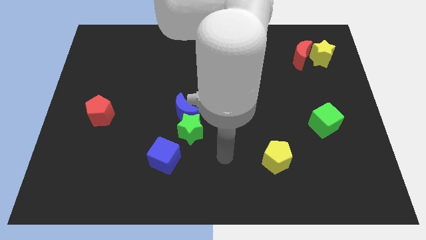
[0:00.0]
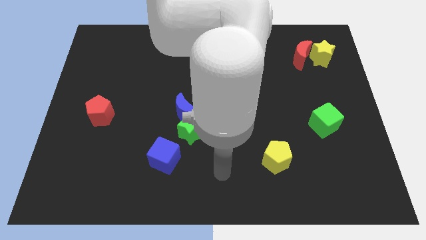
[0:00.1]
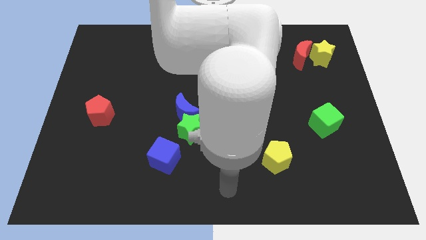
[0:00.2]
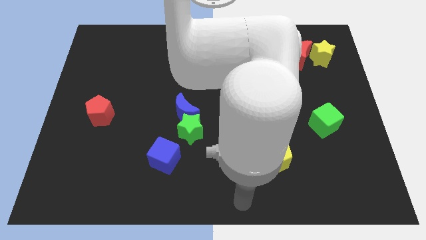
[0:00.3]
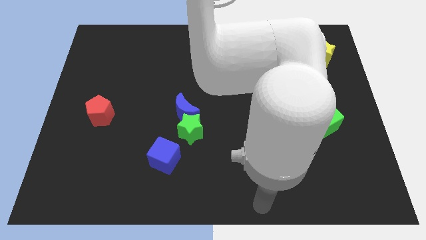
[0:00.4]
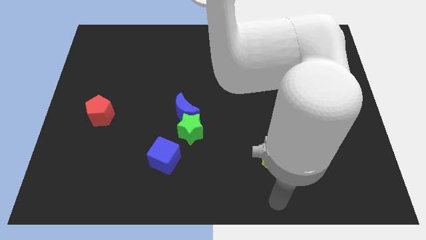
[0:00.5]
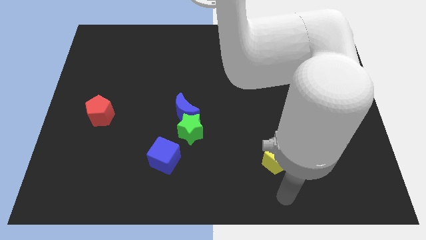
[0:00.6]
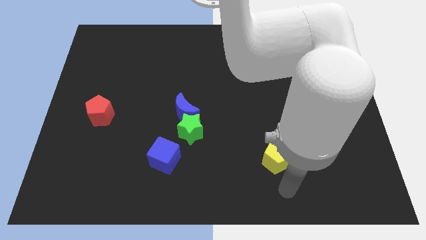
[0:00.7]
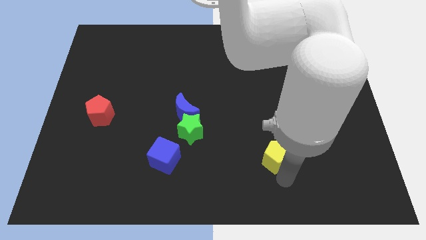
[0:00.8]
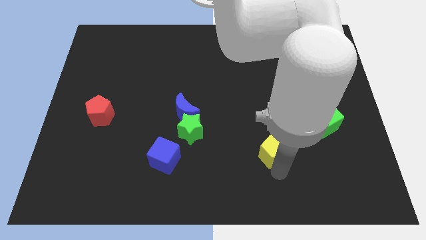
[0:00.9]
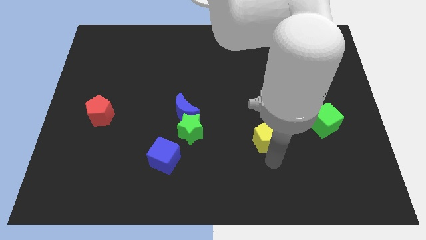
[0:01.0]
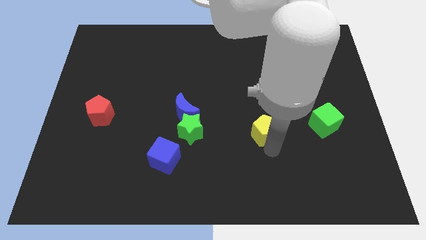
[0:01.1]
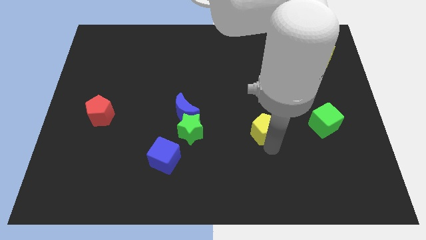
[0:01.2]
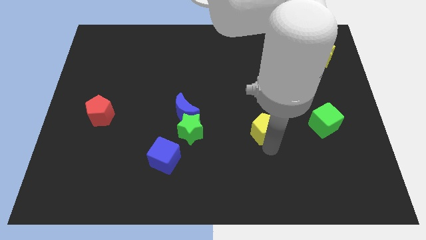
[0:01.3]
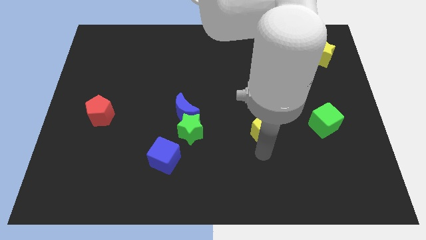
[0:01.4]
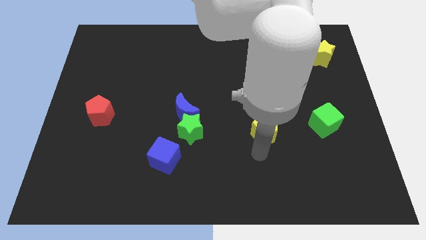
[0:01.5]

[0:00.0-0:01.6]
place the yellow pentagon in between the green star and the green cube

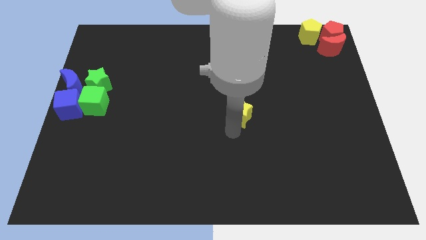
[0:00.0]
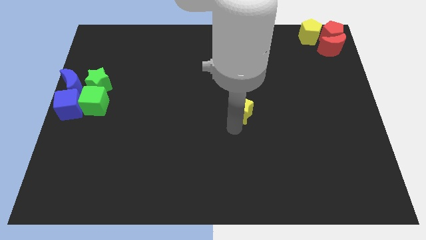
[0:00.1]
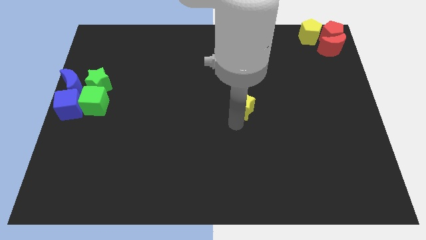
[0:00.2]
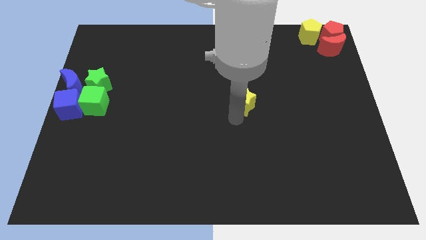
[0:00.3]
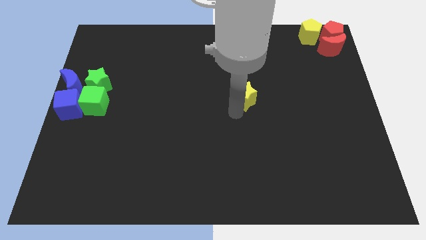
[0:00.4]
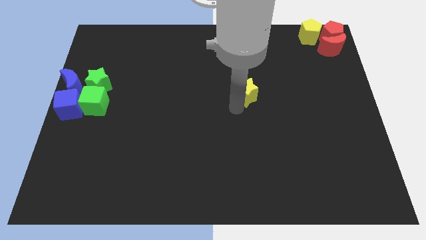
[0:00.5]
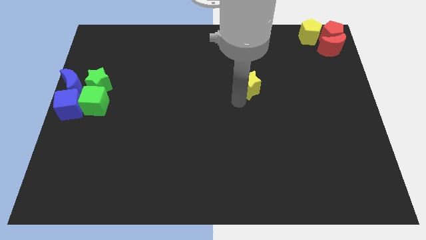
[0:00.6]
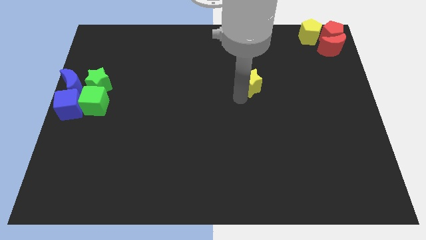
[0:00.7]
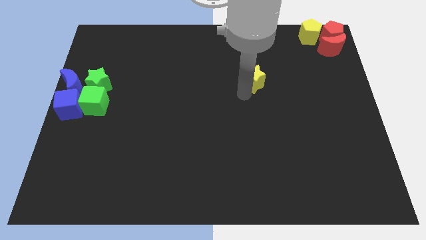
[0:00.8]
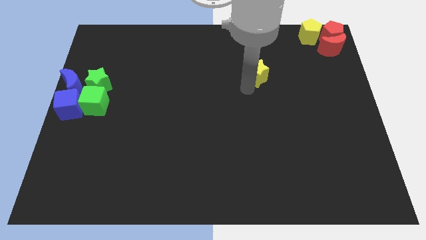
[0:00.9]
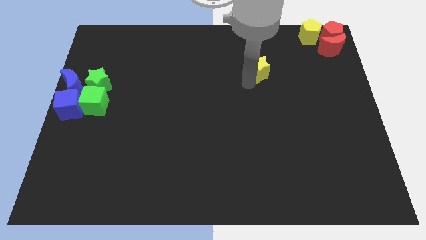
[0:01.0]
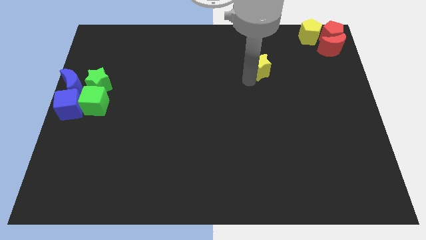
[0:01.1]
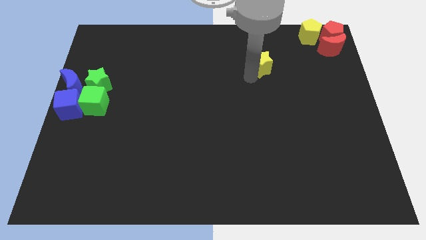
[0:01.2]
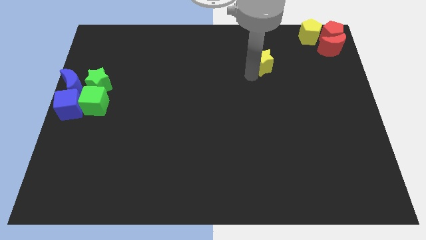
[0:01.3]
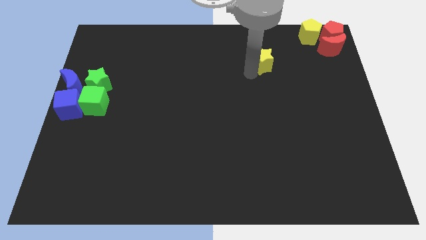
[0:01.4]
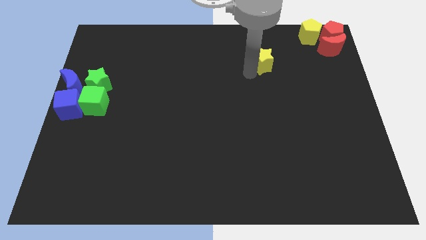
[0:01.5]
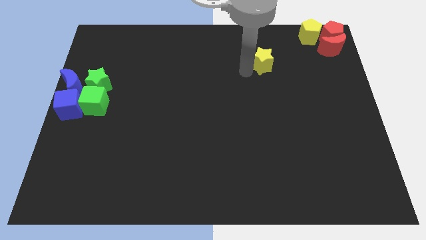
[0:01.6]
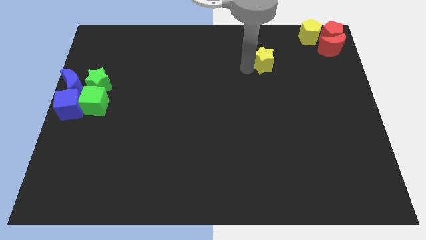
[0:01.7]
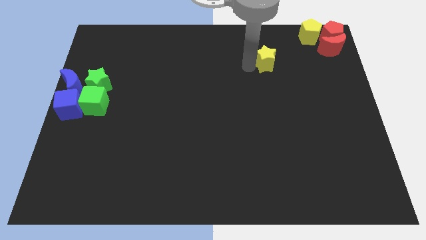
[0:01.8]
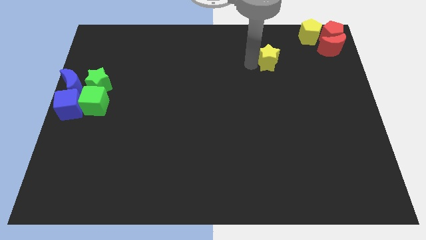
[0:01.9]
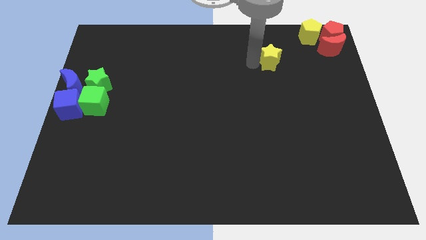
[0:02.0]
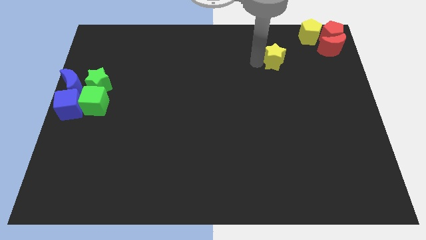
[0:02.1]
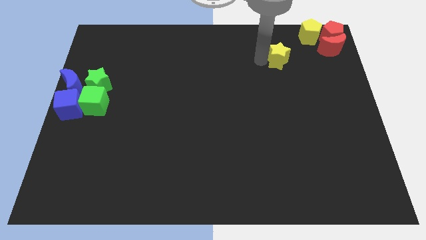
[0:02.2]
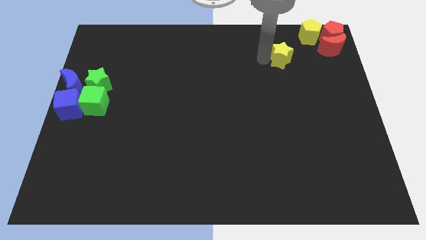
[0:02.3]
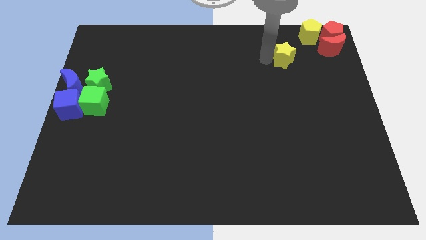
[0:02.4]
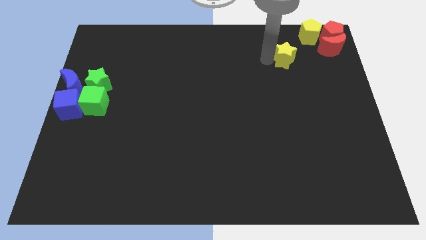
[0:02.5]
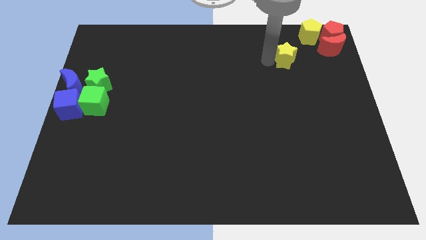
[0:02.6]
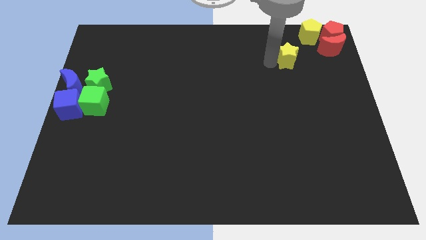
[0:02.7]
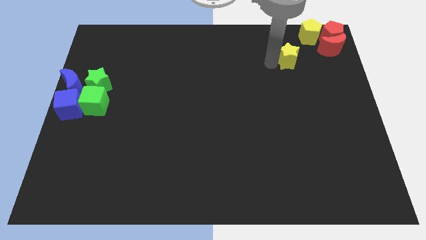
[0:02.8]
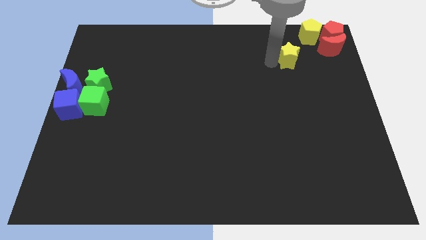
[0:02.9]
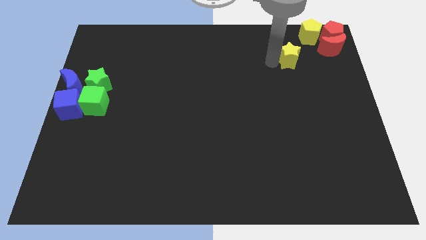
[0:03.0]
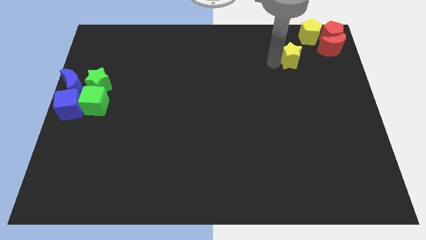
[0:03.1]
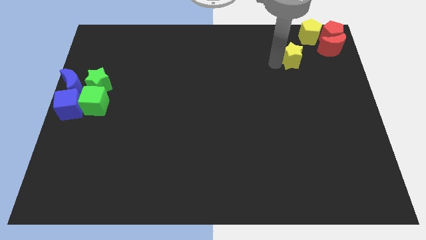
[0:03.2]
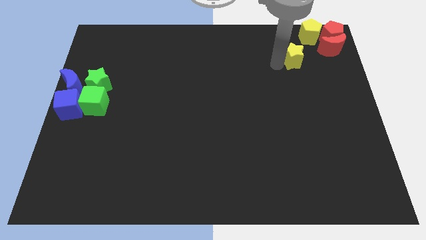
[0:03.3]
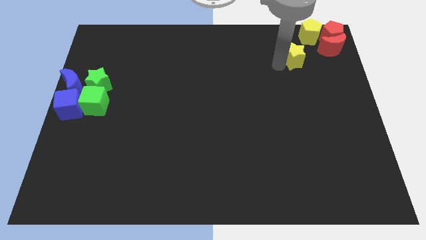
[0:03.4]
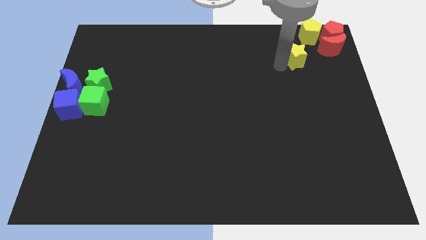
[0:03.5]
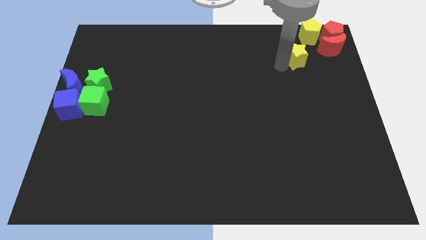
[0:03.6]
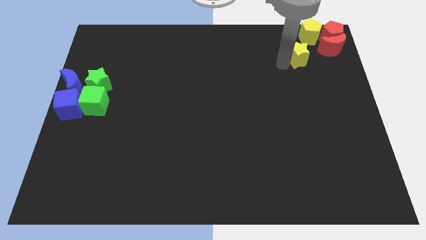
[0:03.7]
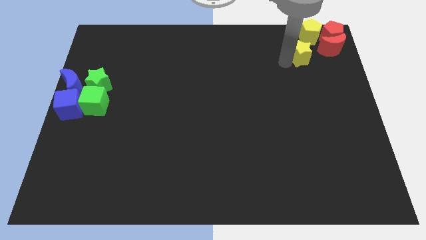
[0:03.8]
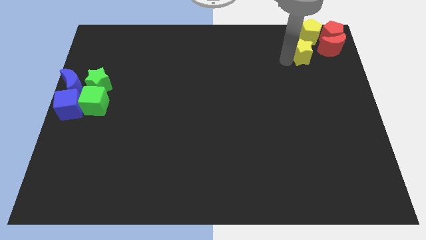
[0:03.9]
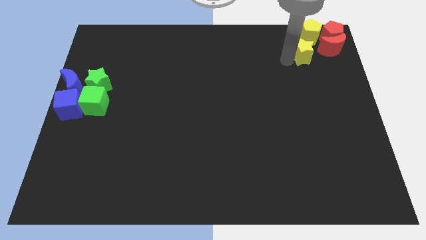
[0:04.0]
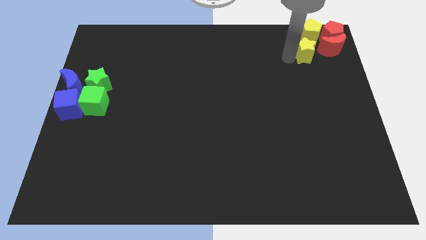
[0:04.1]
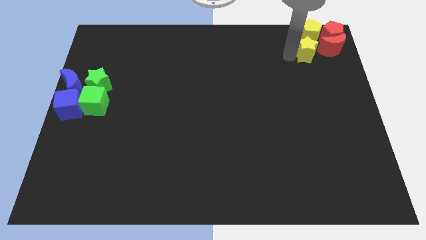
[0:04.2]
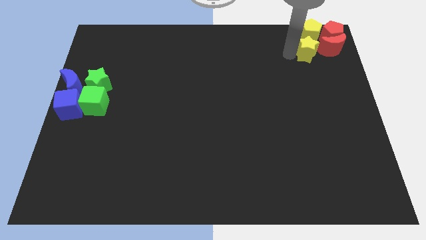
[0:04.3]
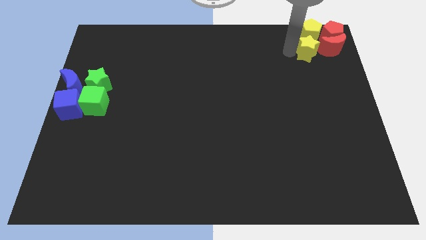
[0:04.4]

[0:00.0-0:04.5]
place the yellow star below the yellow pentagon

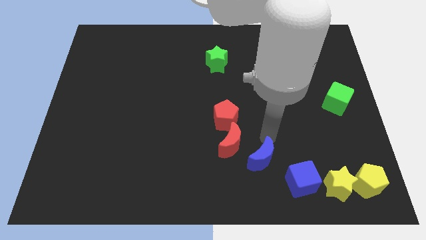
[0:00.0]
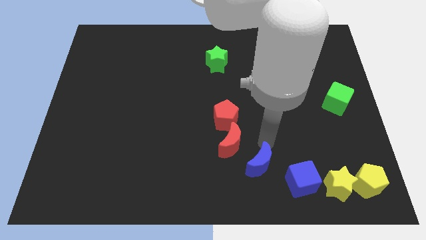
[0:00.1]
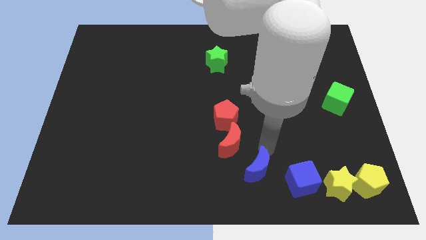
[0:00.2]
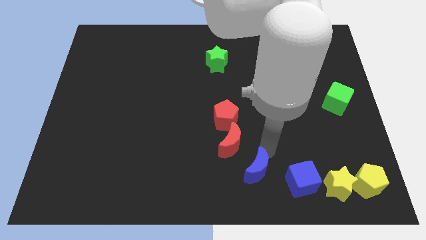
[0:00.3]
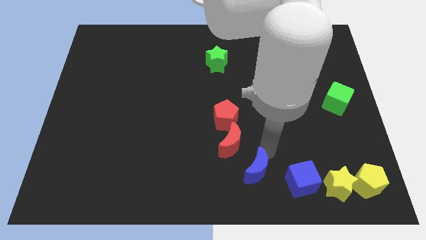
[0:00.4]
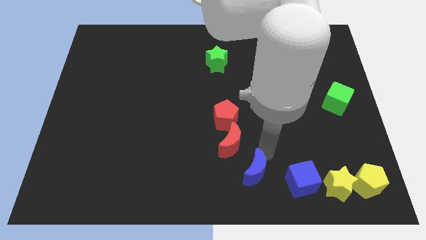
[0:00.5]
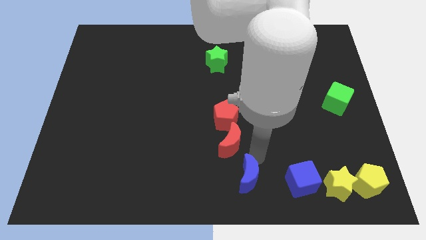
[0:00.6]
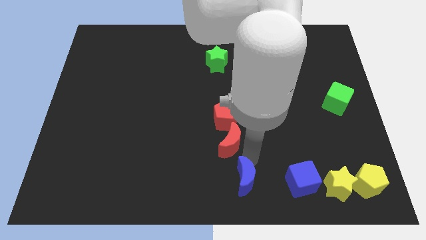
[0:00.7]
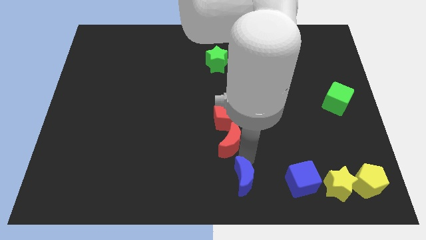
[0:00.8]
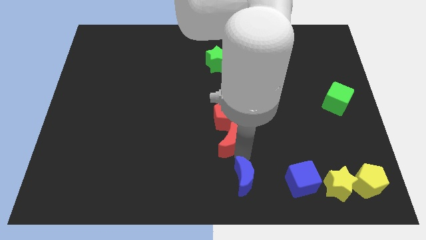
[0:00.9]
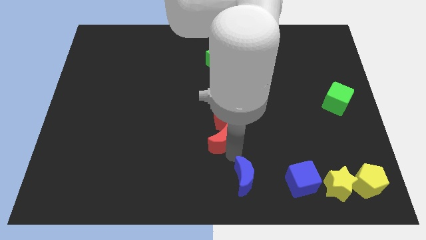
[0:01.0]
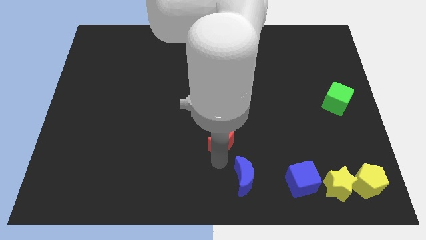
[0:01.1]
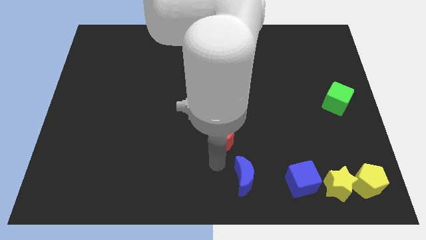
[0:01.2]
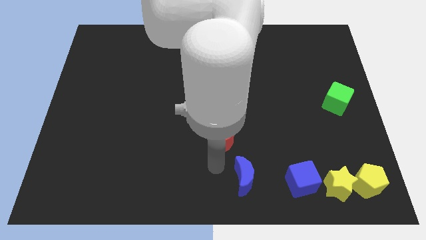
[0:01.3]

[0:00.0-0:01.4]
move the blue moon down ward

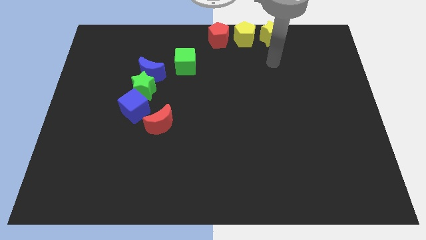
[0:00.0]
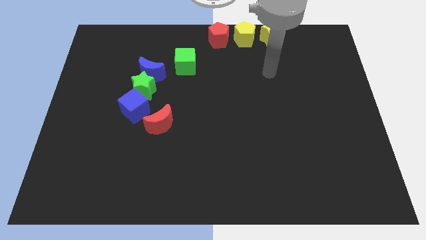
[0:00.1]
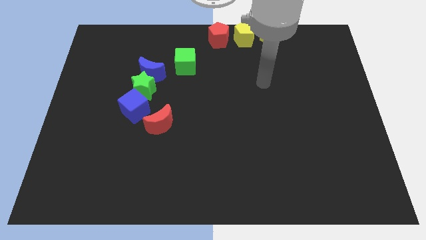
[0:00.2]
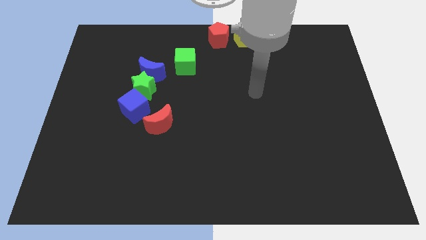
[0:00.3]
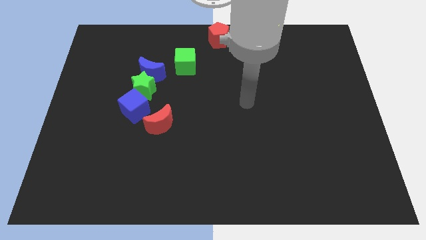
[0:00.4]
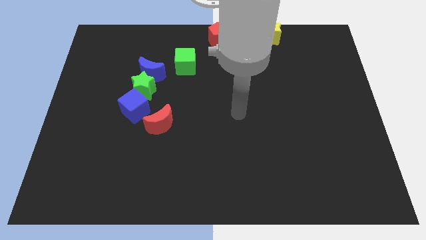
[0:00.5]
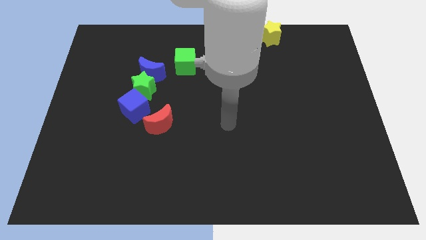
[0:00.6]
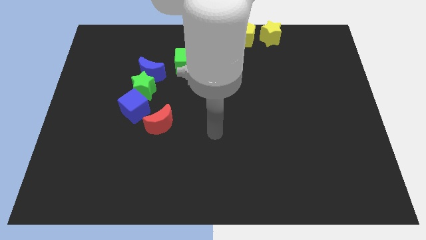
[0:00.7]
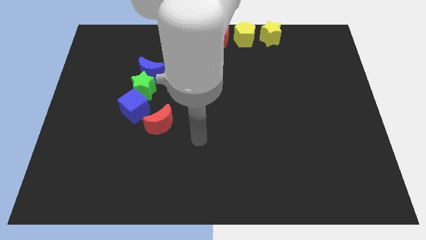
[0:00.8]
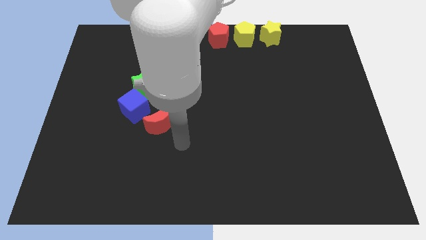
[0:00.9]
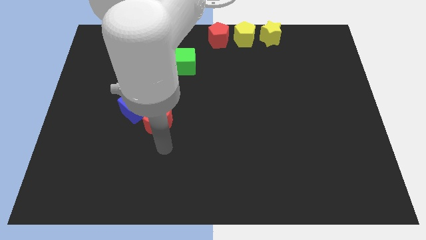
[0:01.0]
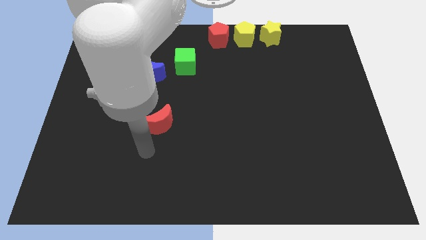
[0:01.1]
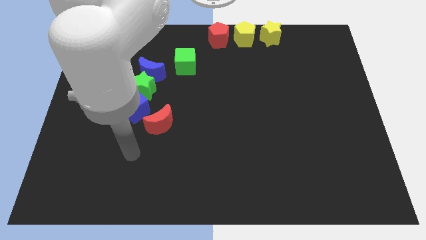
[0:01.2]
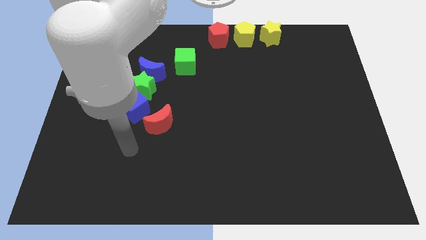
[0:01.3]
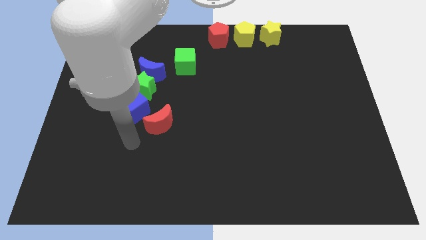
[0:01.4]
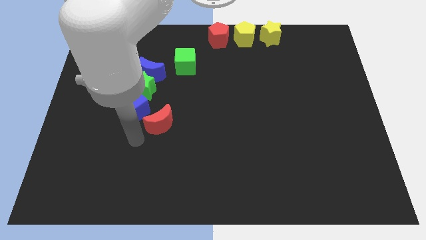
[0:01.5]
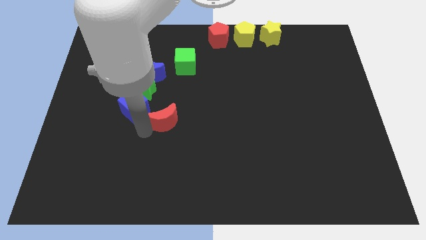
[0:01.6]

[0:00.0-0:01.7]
tap the red crescent
